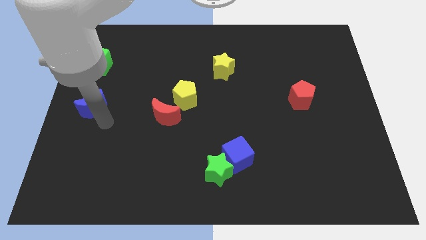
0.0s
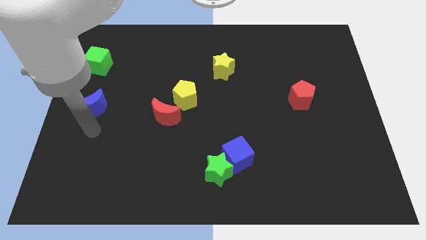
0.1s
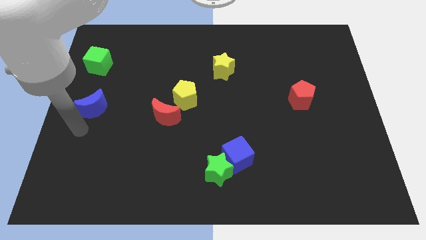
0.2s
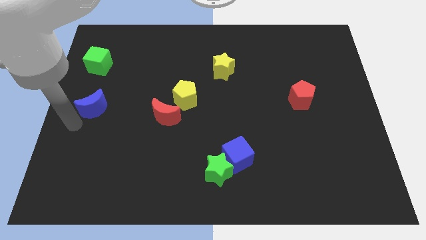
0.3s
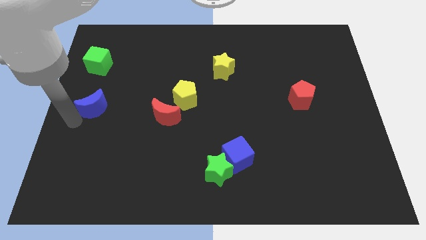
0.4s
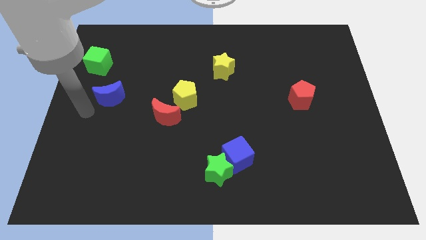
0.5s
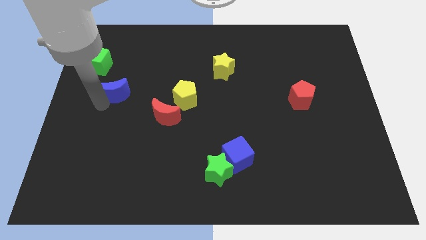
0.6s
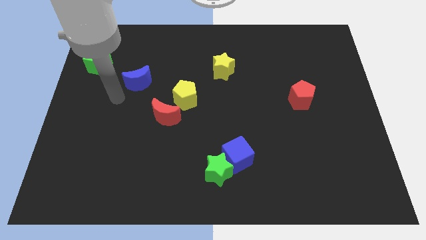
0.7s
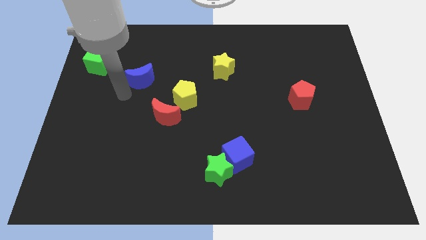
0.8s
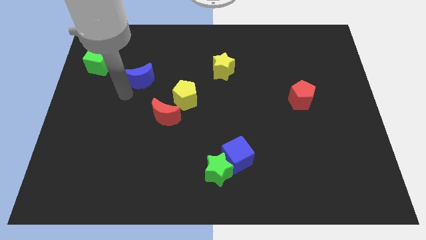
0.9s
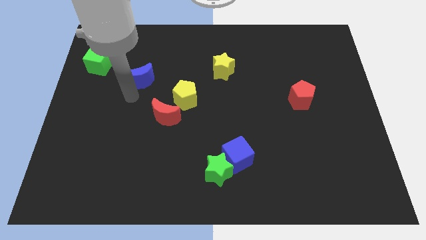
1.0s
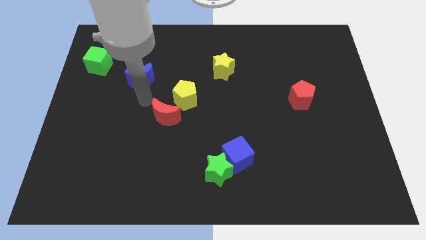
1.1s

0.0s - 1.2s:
place the blue moon in between green cube and yellow pentagon

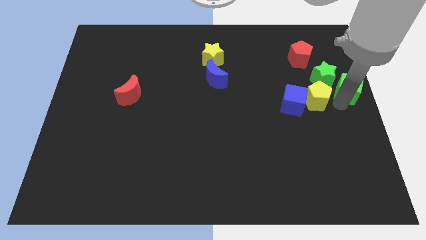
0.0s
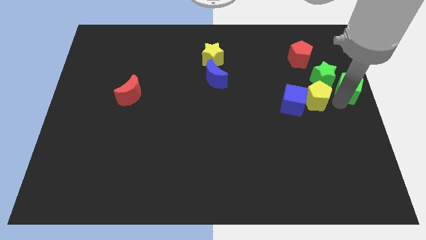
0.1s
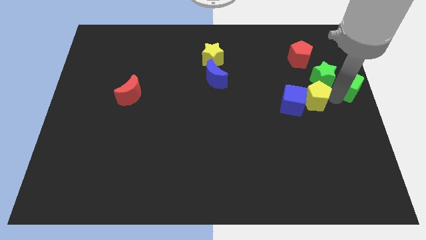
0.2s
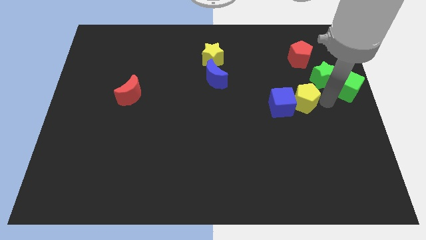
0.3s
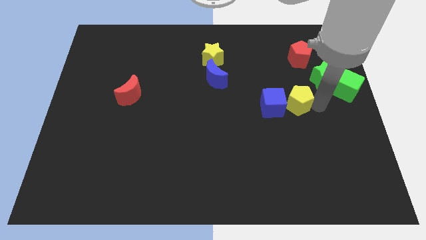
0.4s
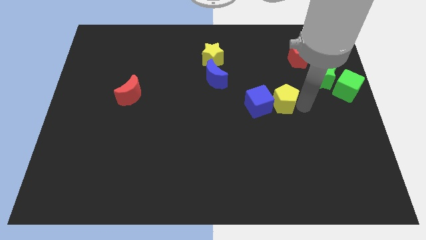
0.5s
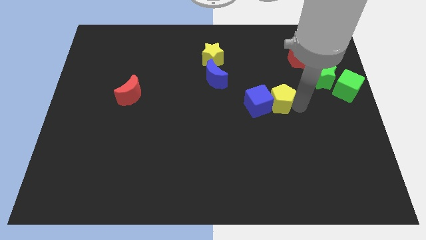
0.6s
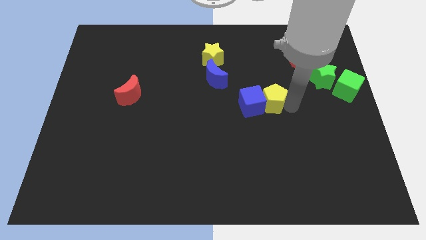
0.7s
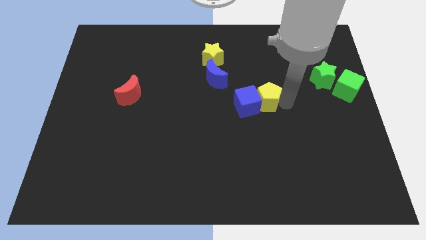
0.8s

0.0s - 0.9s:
move the yellow pentagon into the blue cube

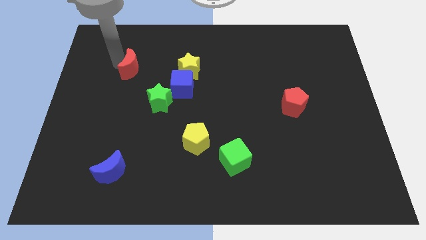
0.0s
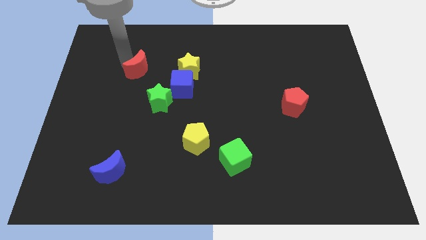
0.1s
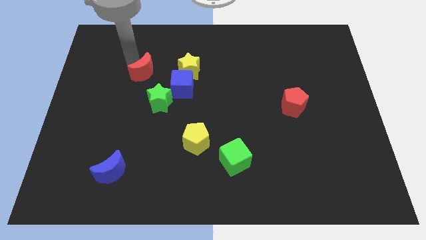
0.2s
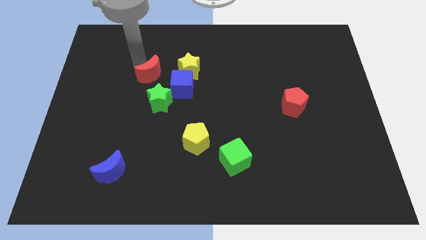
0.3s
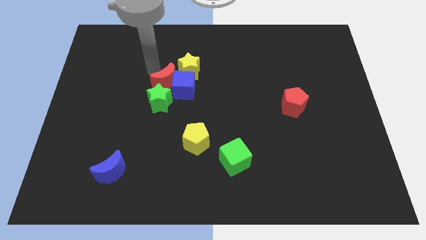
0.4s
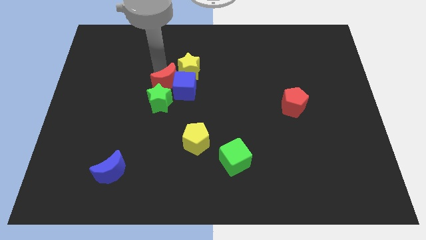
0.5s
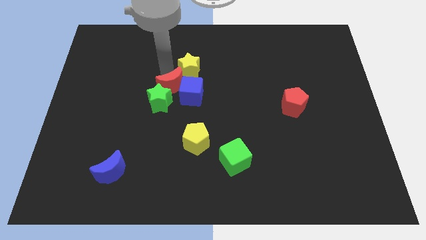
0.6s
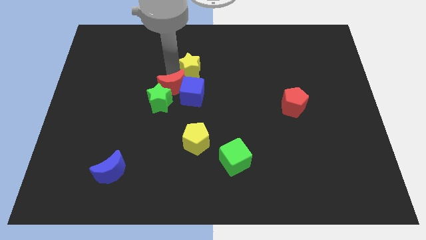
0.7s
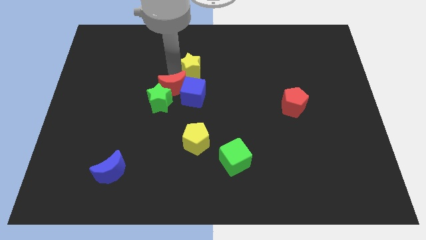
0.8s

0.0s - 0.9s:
push the red moon into the group of block

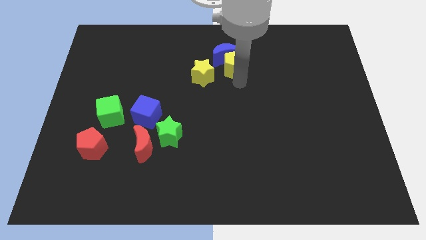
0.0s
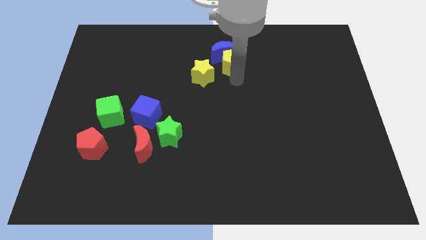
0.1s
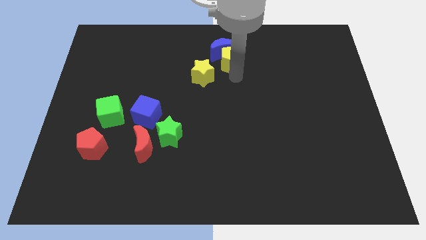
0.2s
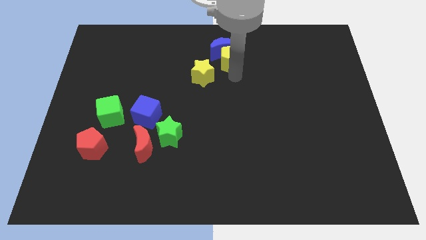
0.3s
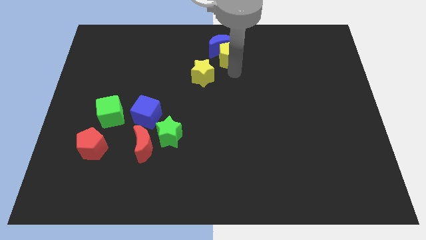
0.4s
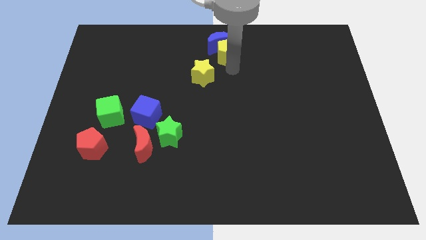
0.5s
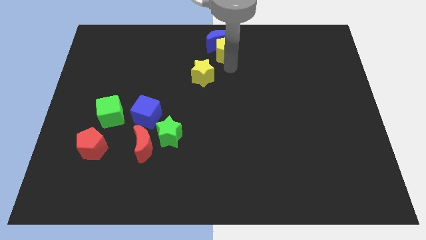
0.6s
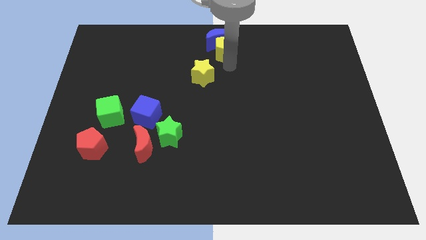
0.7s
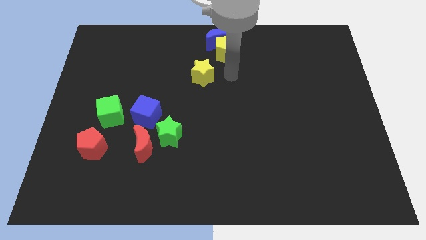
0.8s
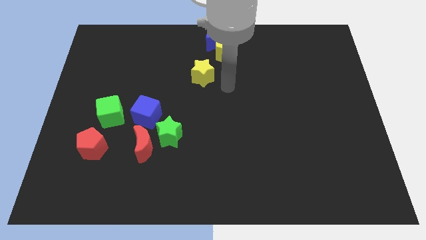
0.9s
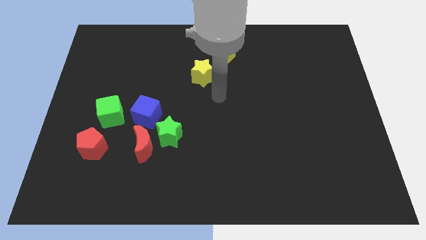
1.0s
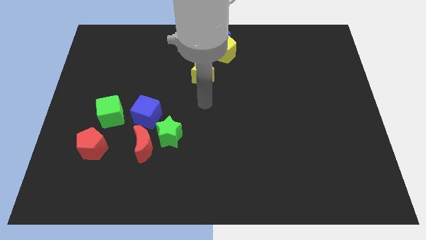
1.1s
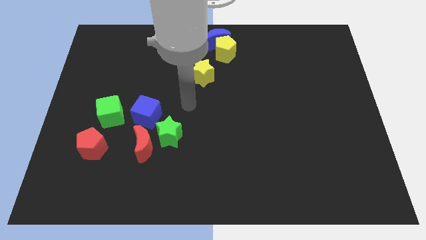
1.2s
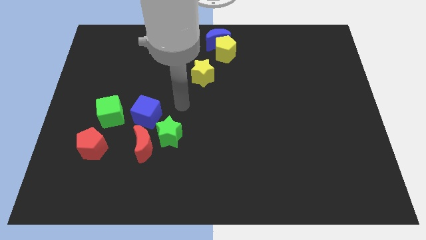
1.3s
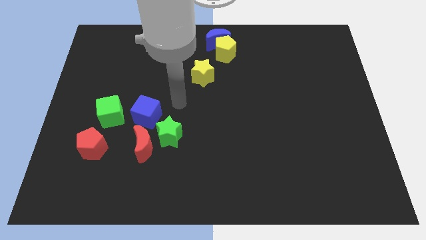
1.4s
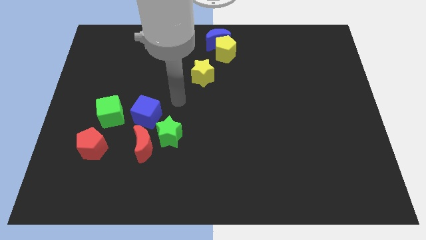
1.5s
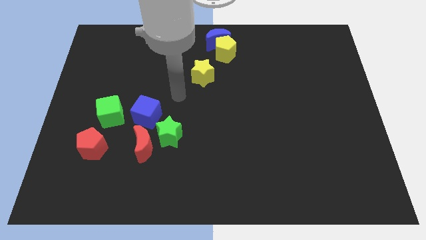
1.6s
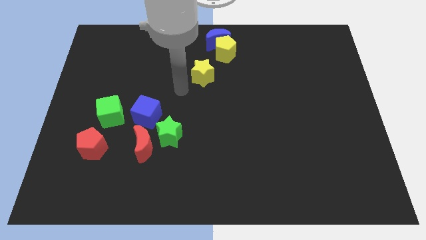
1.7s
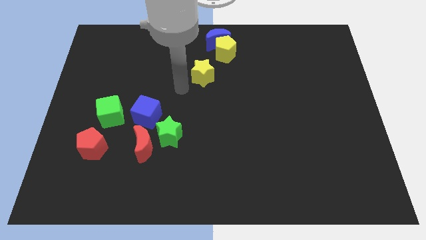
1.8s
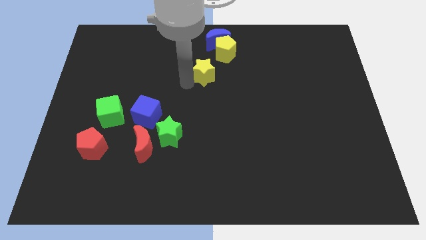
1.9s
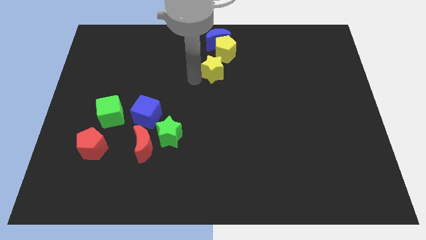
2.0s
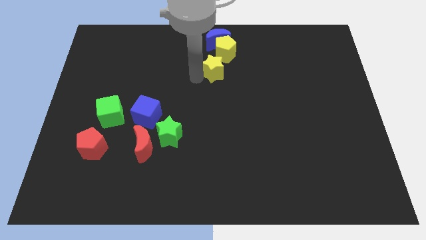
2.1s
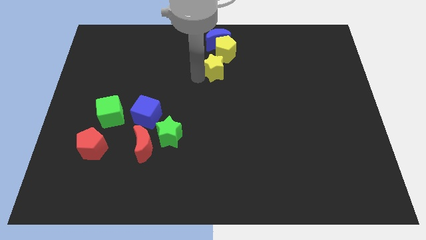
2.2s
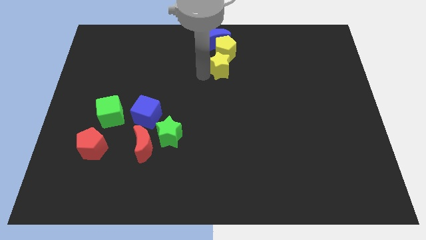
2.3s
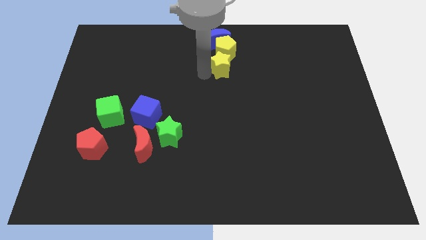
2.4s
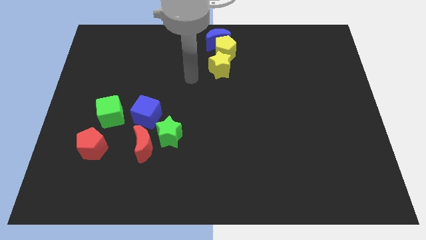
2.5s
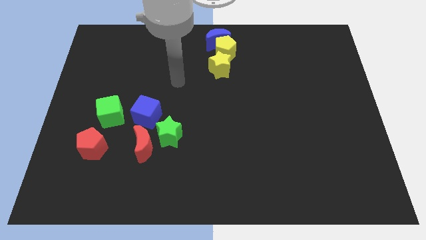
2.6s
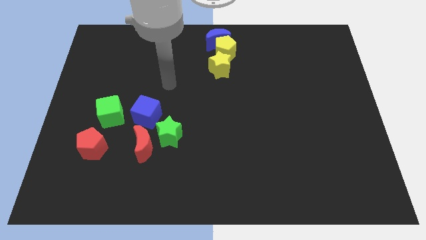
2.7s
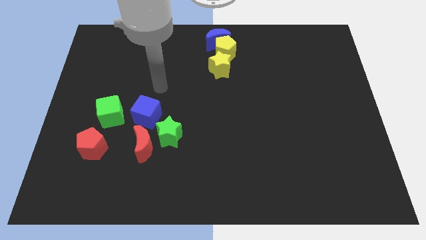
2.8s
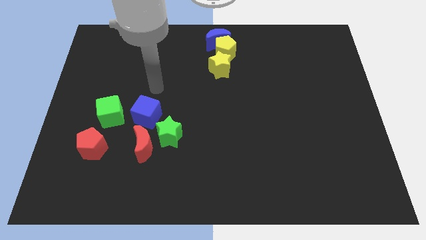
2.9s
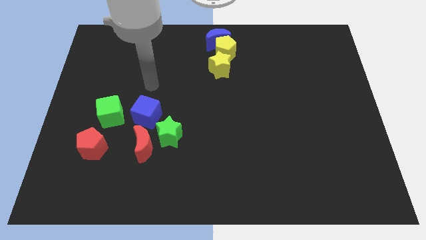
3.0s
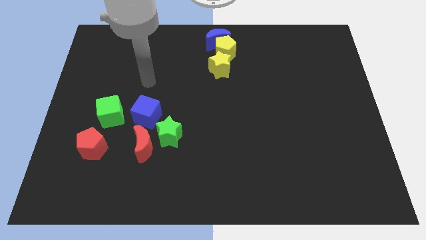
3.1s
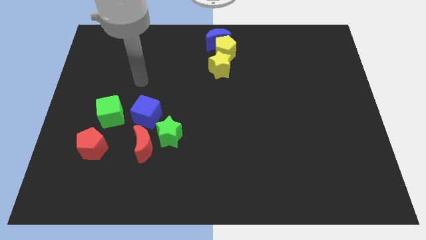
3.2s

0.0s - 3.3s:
blue cube yellow pentagon yellow star placed in a vertical line

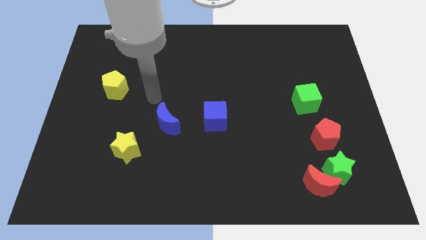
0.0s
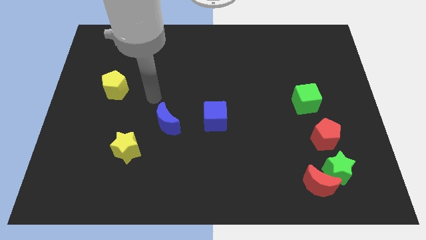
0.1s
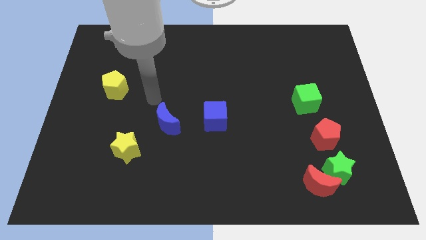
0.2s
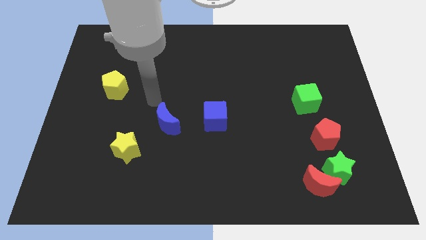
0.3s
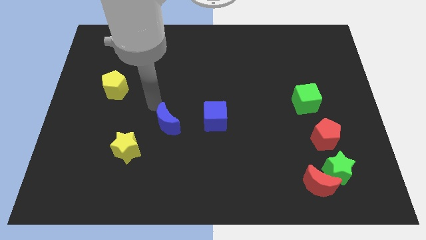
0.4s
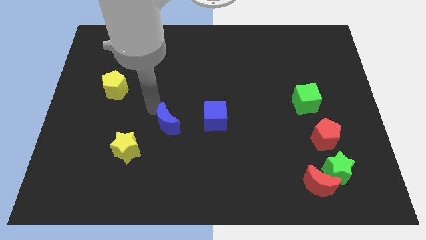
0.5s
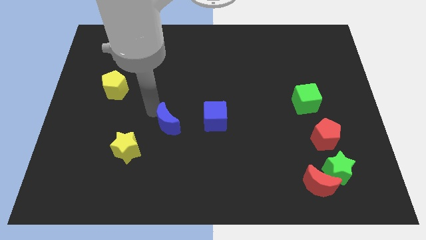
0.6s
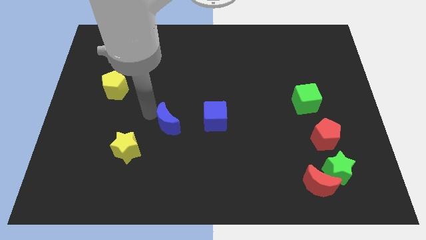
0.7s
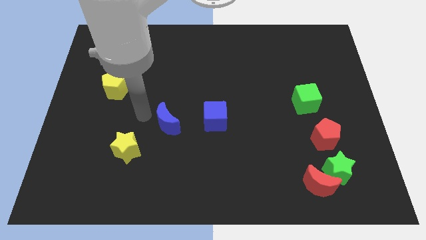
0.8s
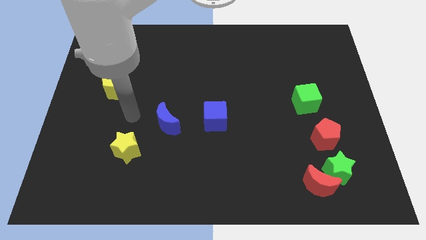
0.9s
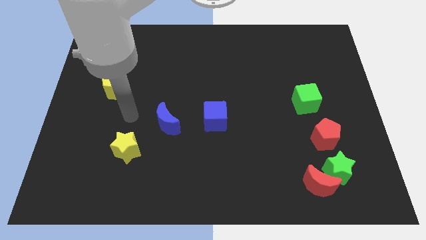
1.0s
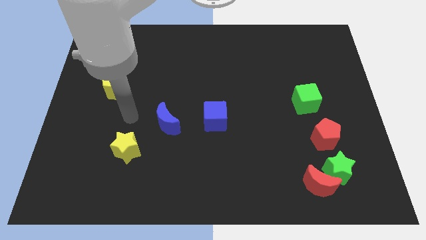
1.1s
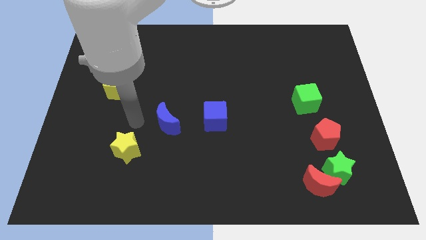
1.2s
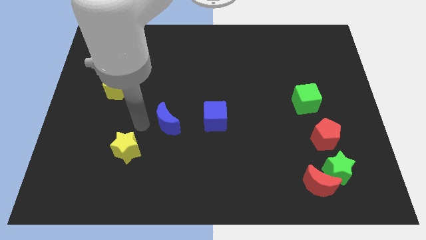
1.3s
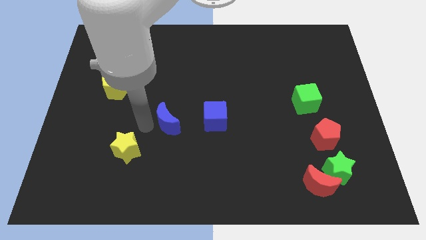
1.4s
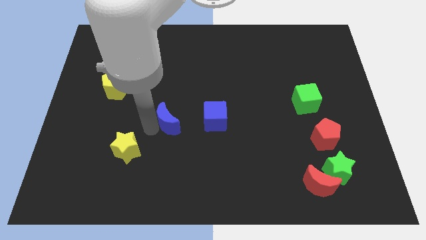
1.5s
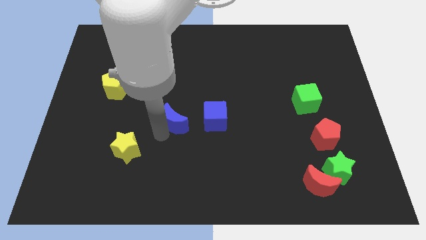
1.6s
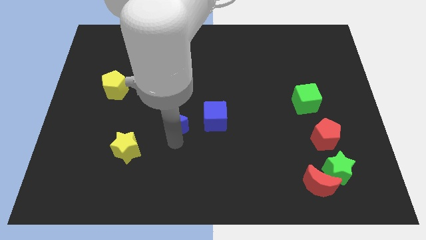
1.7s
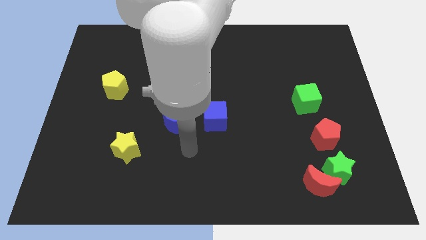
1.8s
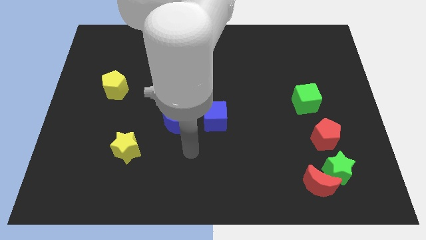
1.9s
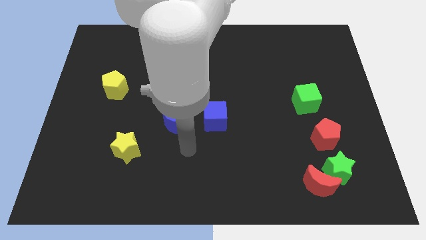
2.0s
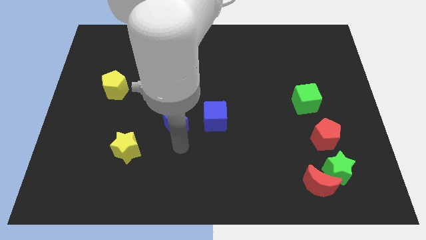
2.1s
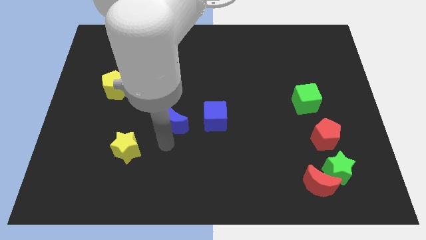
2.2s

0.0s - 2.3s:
slightly touch the blue crescent

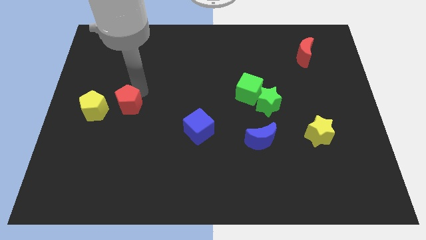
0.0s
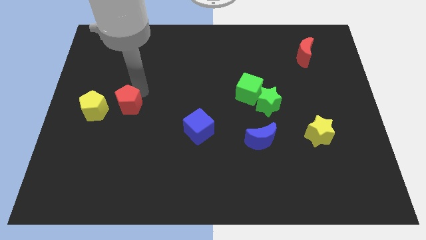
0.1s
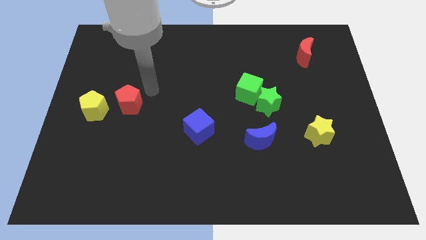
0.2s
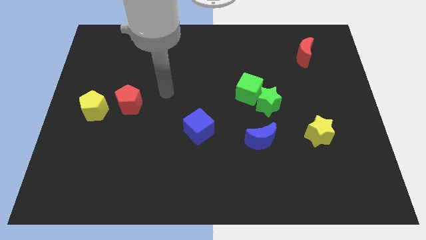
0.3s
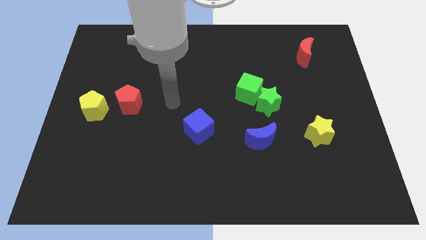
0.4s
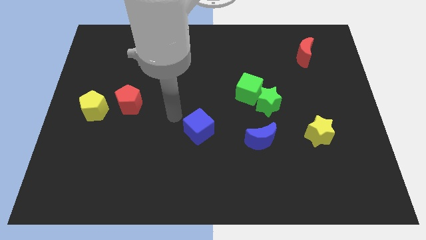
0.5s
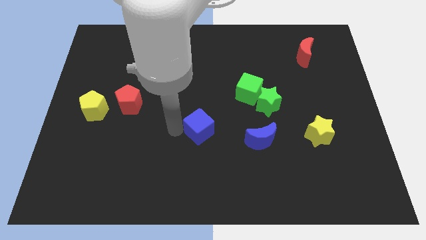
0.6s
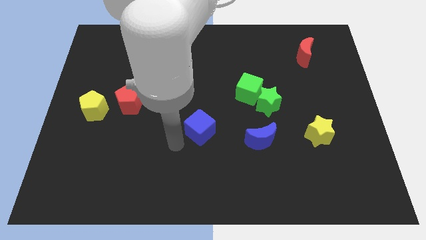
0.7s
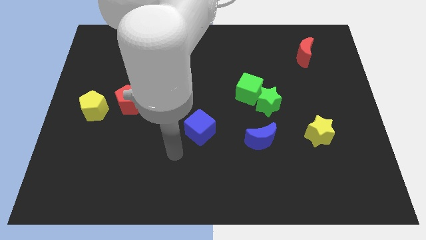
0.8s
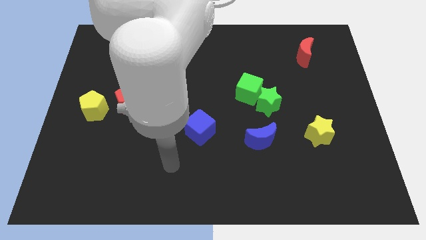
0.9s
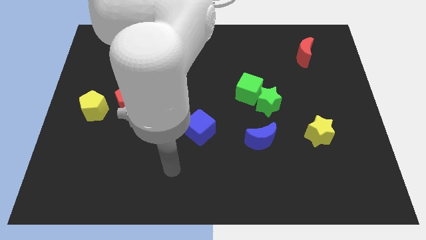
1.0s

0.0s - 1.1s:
slightly touch left to the blue cube
